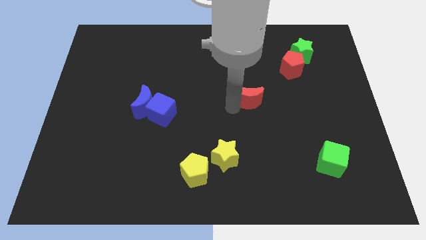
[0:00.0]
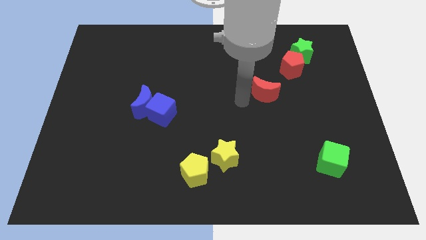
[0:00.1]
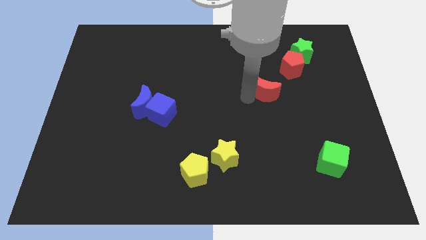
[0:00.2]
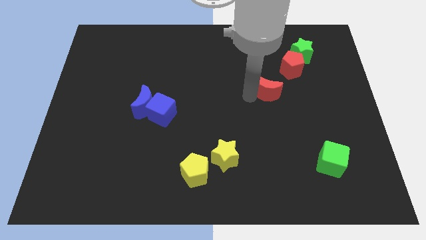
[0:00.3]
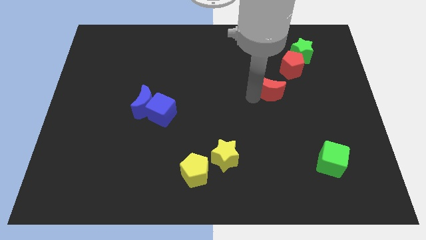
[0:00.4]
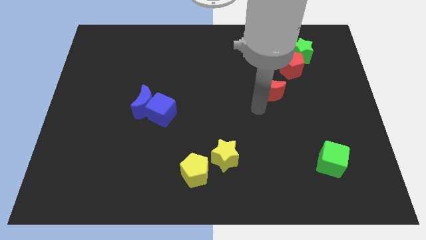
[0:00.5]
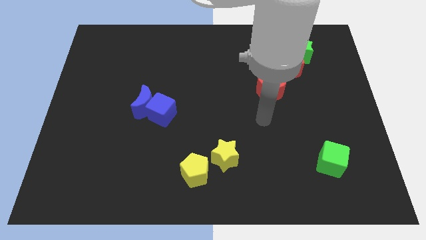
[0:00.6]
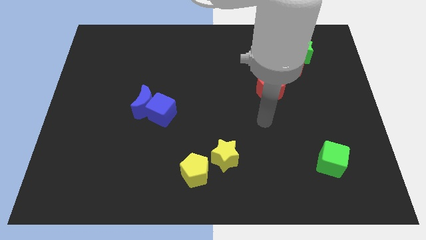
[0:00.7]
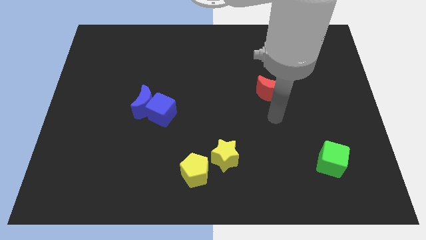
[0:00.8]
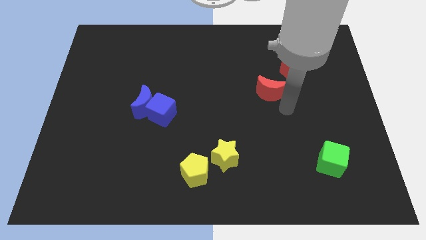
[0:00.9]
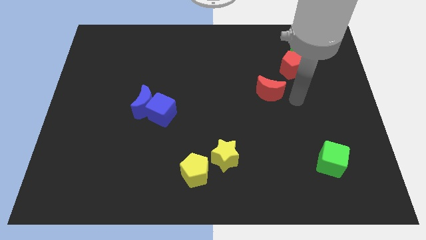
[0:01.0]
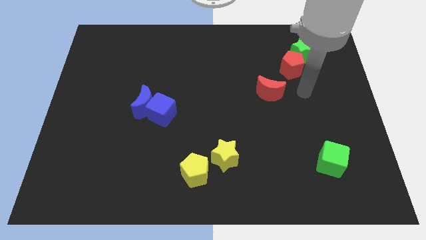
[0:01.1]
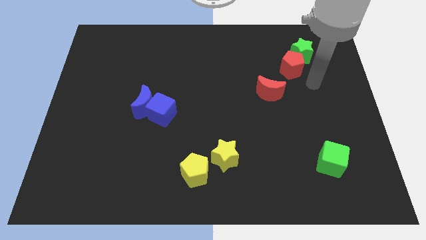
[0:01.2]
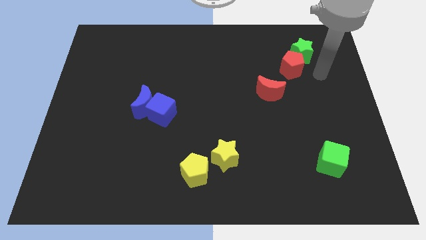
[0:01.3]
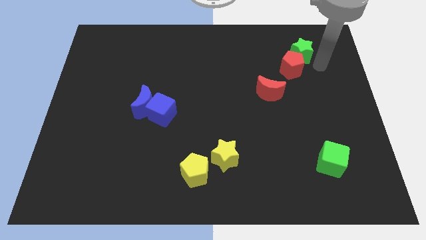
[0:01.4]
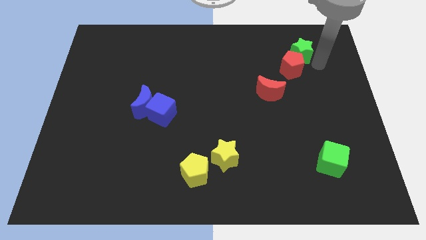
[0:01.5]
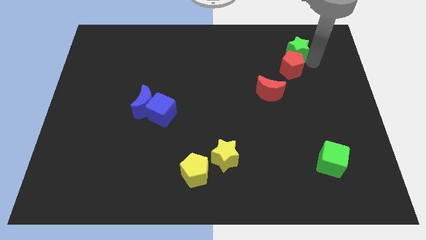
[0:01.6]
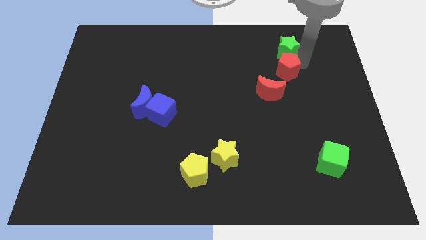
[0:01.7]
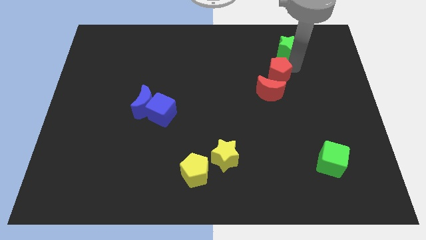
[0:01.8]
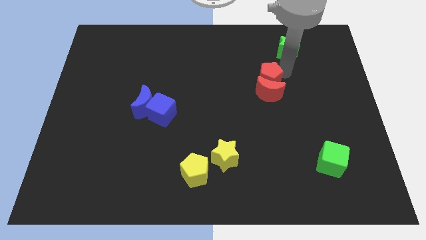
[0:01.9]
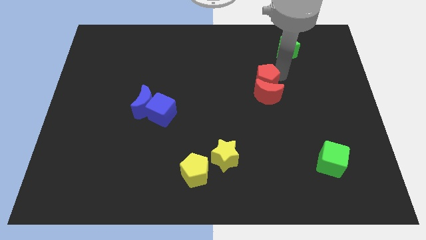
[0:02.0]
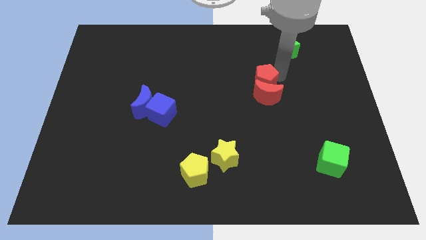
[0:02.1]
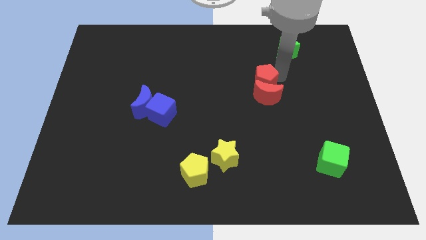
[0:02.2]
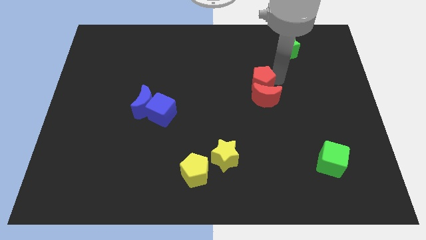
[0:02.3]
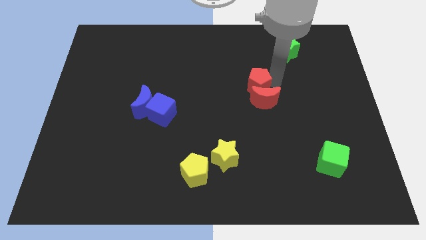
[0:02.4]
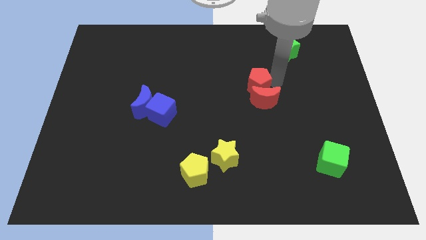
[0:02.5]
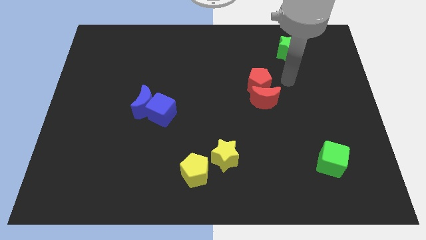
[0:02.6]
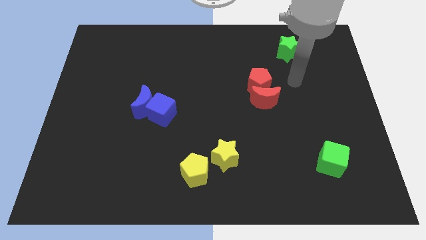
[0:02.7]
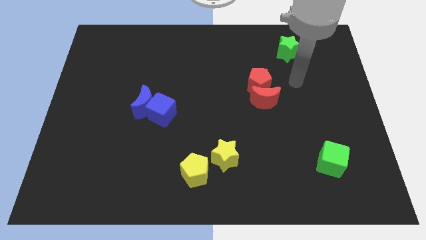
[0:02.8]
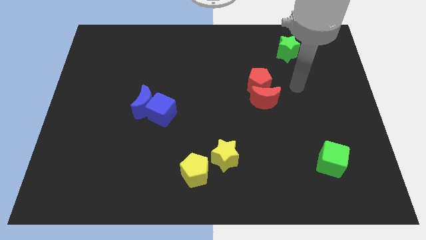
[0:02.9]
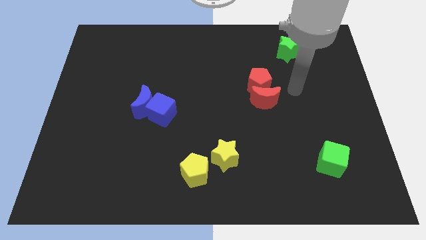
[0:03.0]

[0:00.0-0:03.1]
move red moon red pentagon slightly to the center

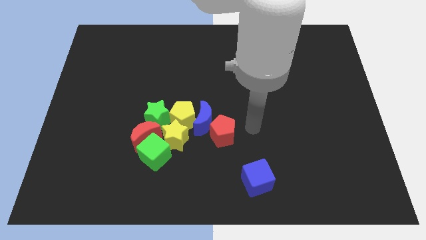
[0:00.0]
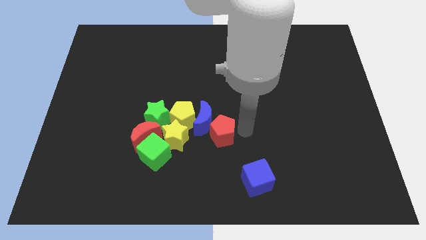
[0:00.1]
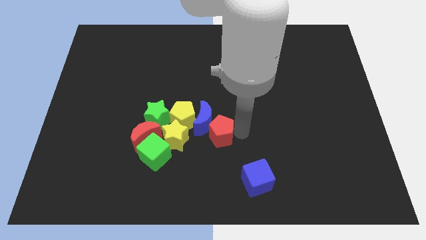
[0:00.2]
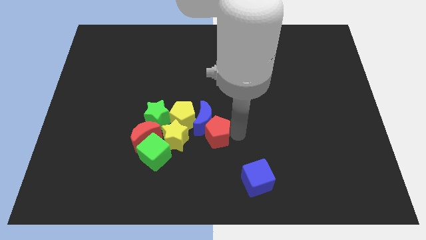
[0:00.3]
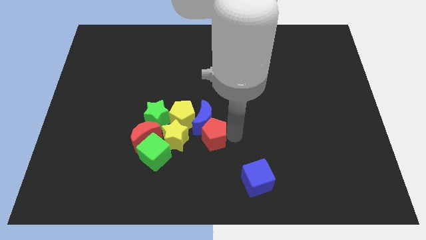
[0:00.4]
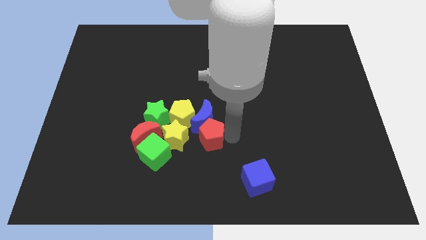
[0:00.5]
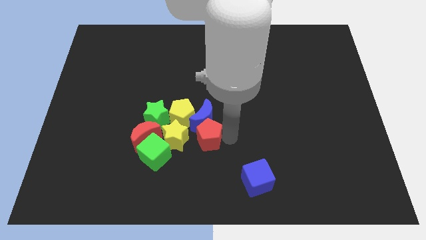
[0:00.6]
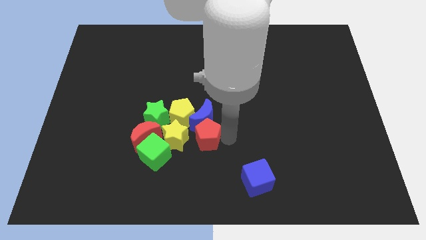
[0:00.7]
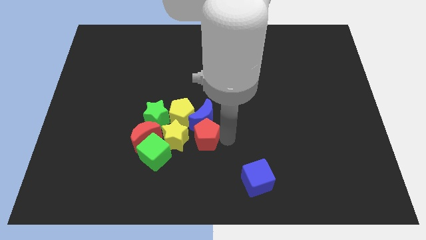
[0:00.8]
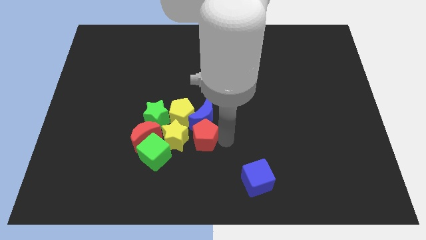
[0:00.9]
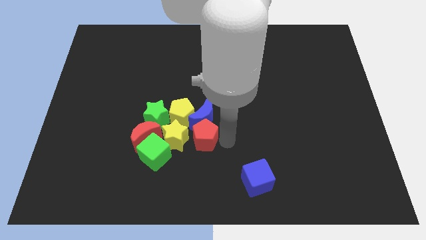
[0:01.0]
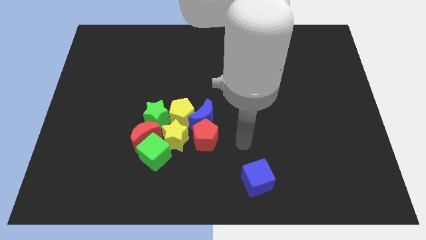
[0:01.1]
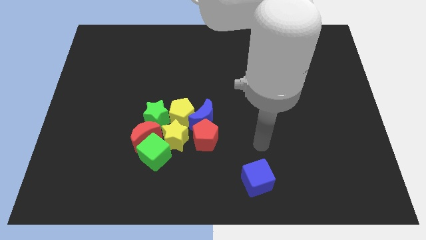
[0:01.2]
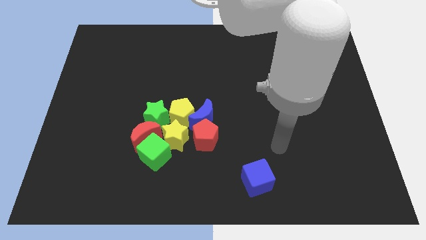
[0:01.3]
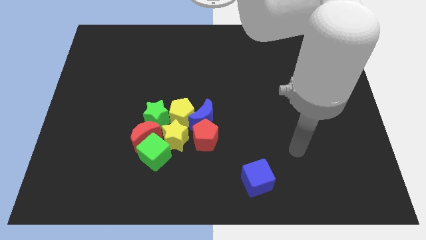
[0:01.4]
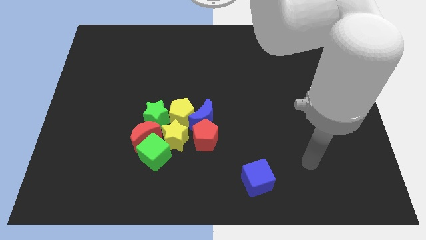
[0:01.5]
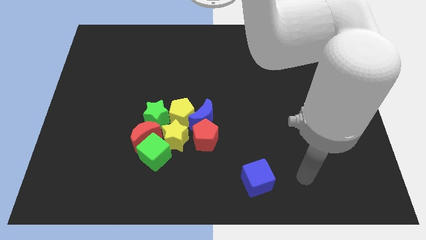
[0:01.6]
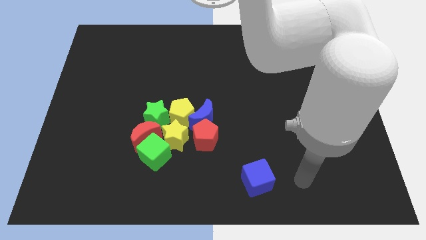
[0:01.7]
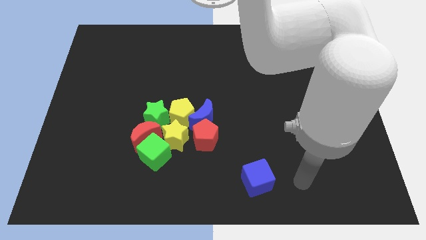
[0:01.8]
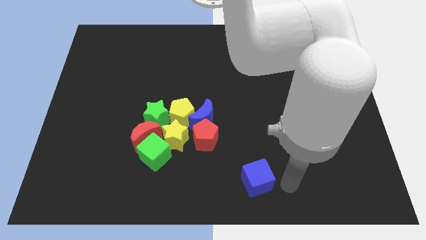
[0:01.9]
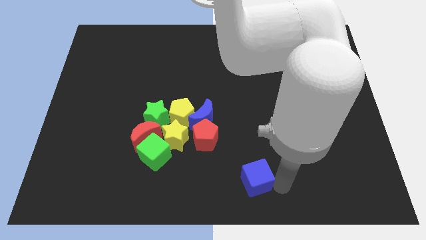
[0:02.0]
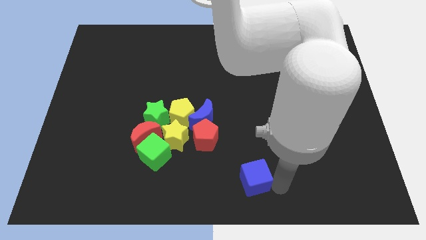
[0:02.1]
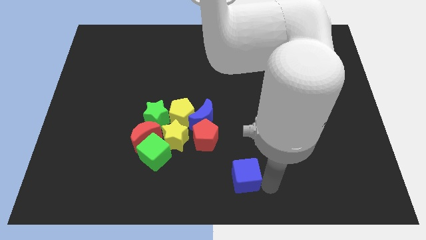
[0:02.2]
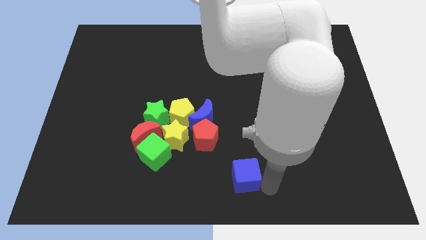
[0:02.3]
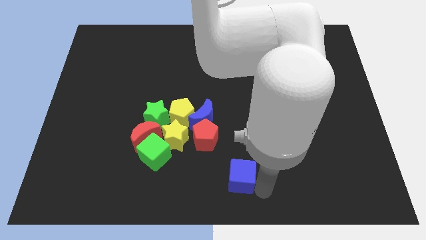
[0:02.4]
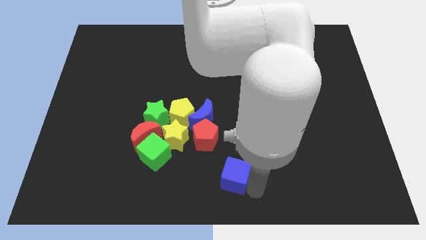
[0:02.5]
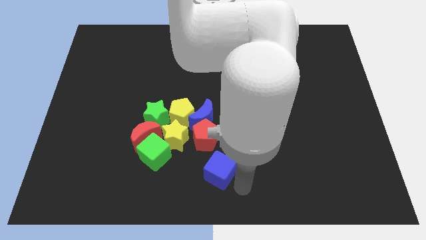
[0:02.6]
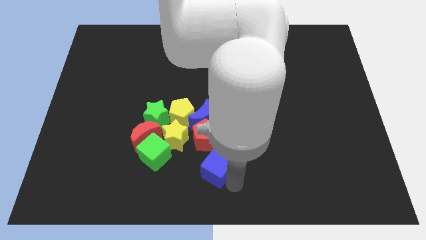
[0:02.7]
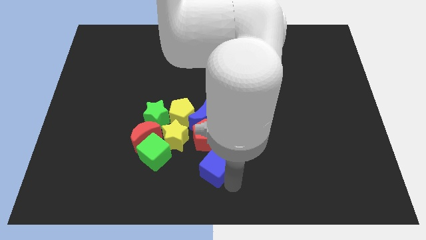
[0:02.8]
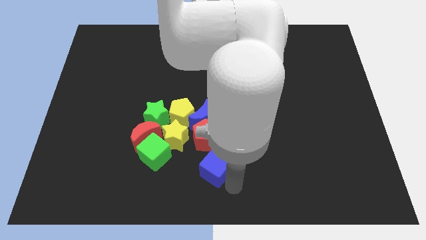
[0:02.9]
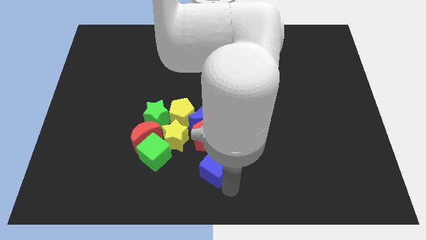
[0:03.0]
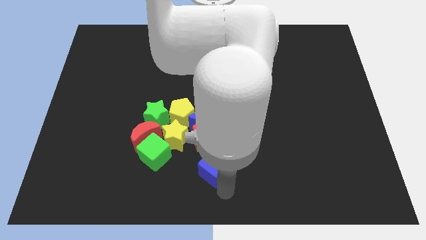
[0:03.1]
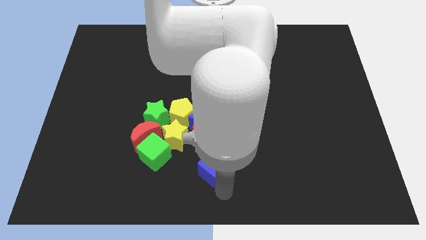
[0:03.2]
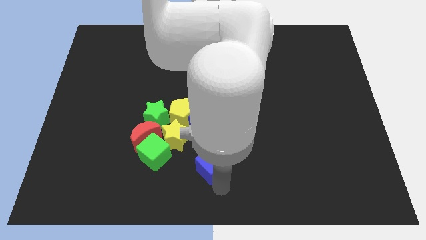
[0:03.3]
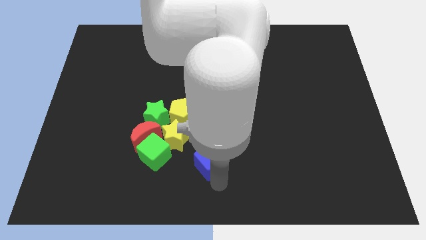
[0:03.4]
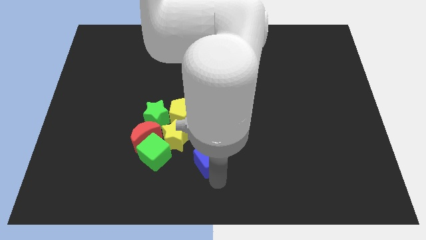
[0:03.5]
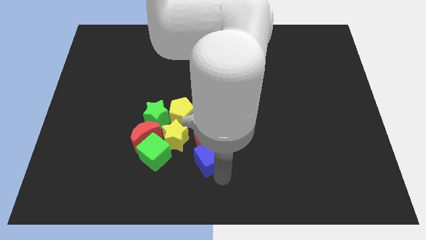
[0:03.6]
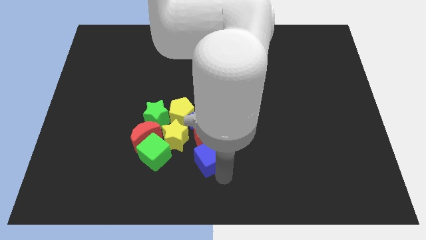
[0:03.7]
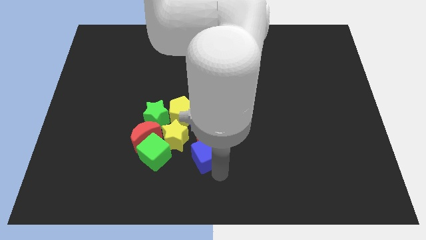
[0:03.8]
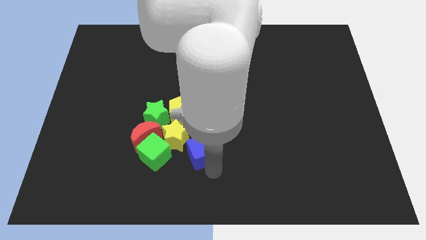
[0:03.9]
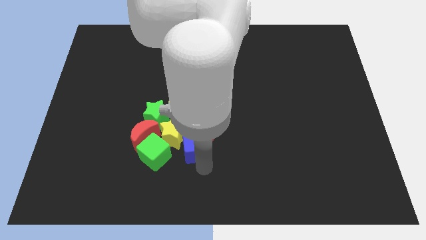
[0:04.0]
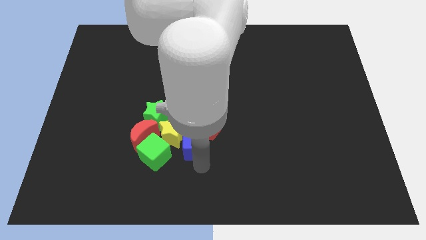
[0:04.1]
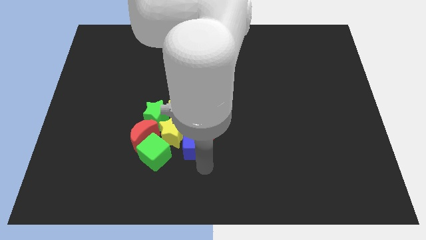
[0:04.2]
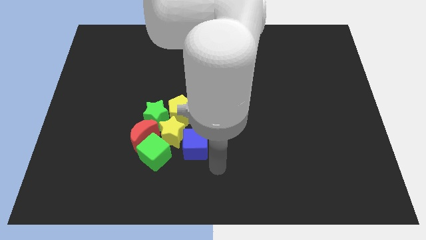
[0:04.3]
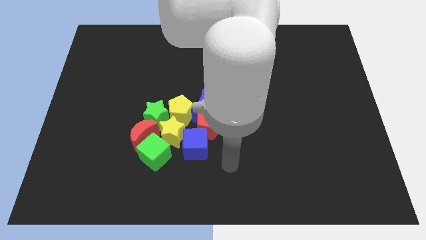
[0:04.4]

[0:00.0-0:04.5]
move blue cube to the right of yellow star

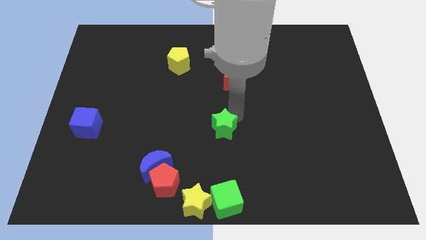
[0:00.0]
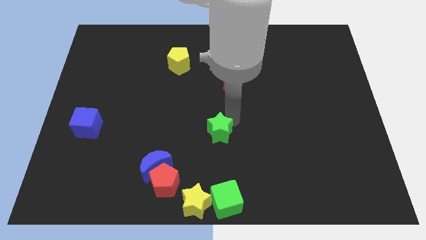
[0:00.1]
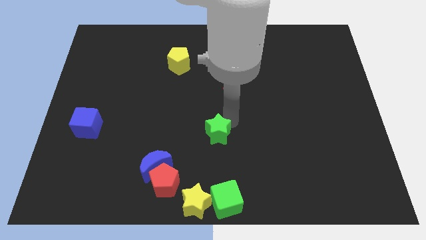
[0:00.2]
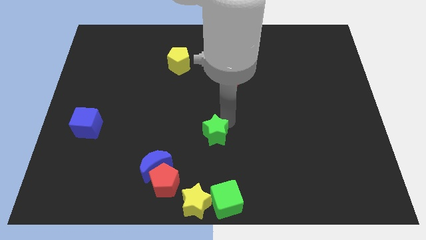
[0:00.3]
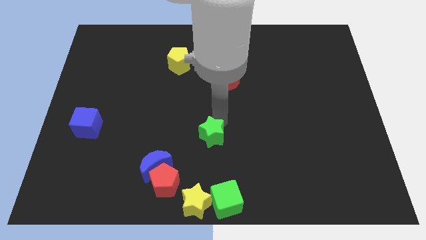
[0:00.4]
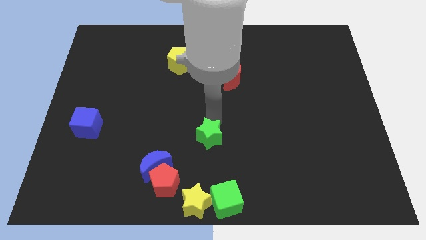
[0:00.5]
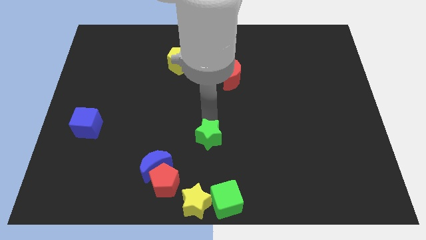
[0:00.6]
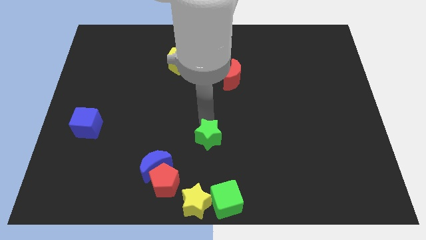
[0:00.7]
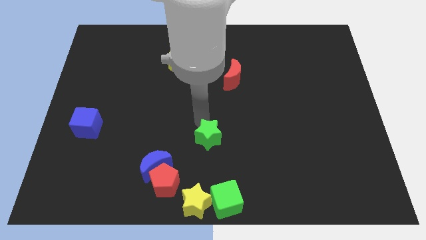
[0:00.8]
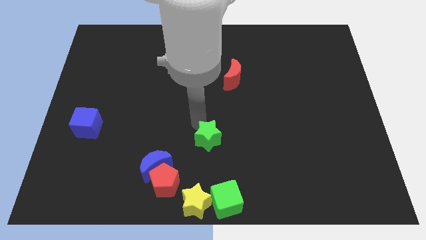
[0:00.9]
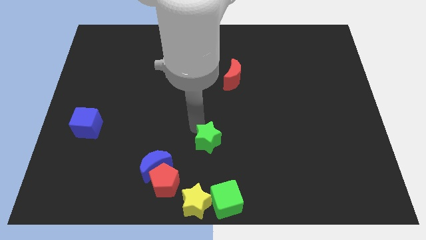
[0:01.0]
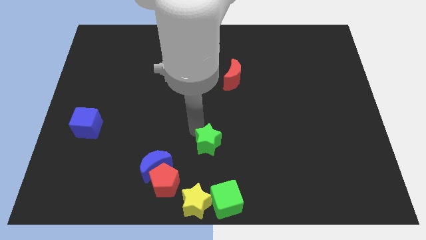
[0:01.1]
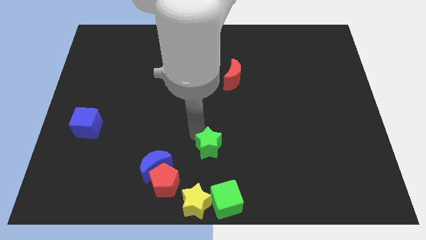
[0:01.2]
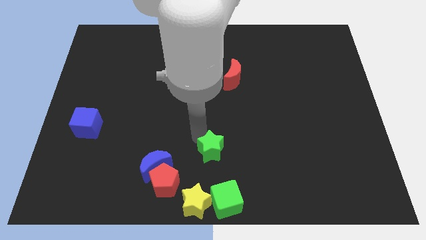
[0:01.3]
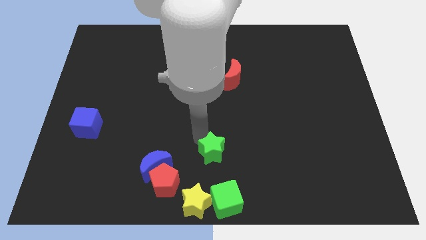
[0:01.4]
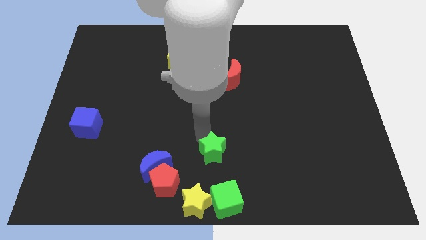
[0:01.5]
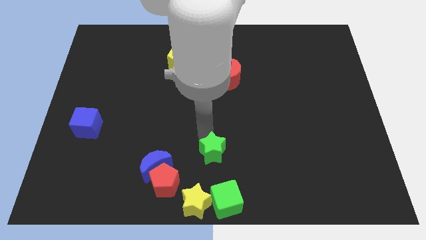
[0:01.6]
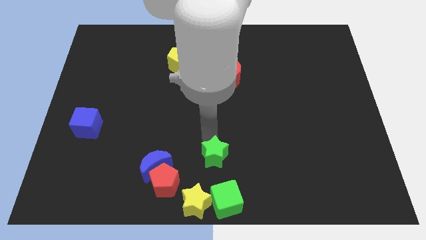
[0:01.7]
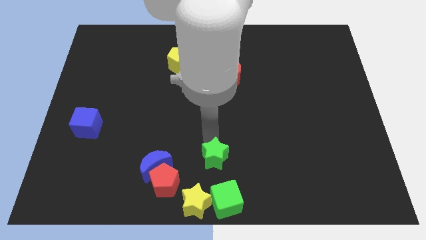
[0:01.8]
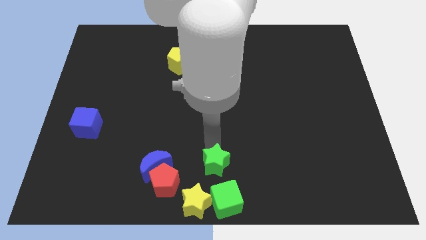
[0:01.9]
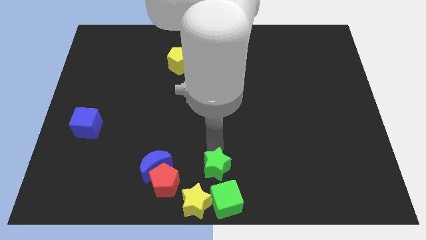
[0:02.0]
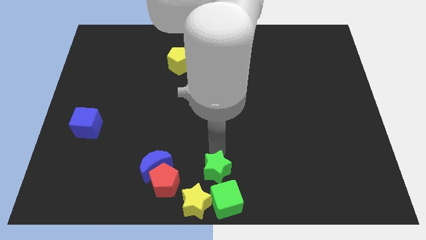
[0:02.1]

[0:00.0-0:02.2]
slide green star towards green cube
